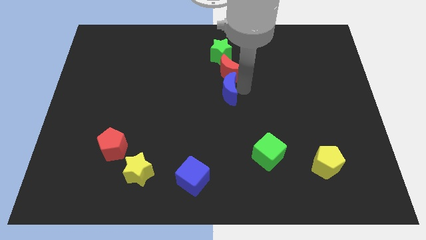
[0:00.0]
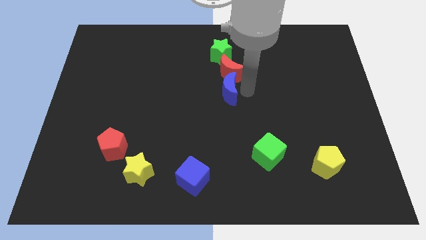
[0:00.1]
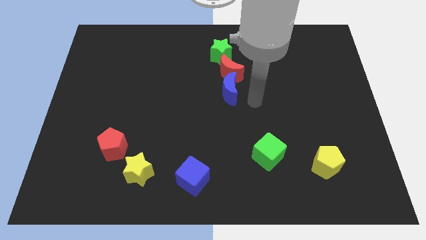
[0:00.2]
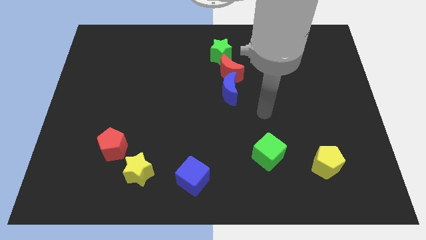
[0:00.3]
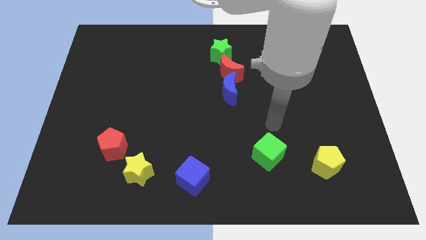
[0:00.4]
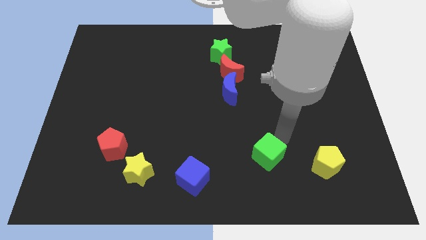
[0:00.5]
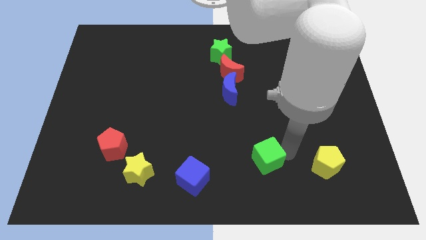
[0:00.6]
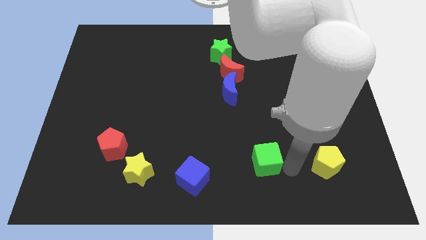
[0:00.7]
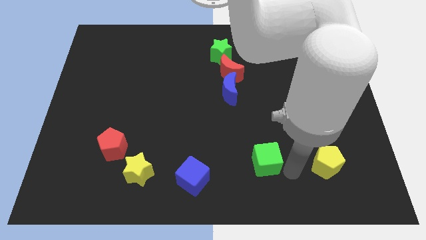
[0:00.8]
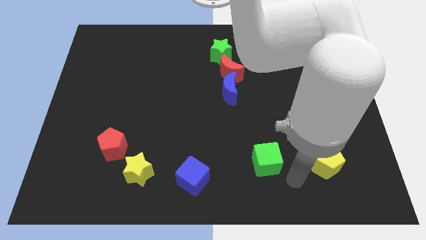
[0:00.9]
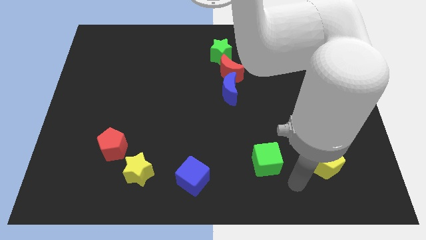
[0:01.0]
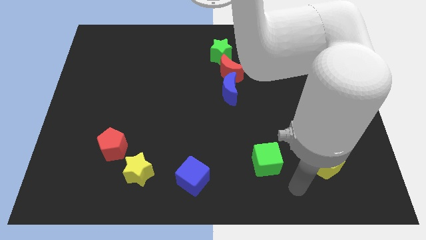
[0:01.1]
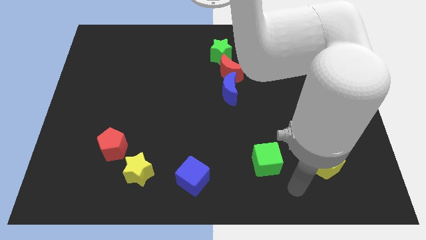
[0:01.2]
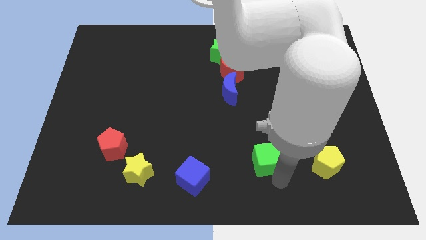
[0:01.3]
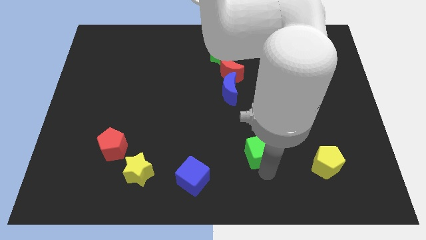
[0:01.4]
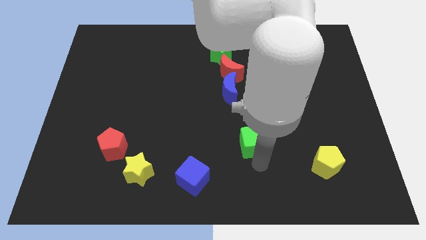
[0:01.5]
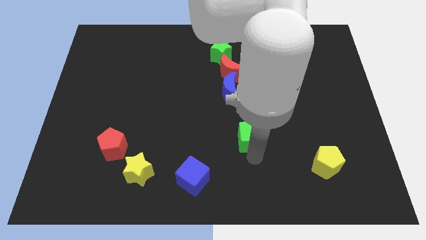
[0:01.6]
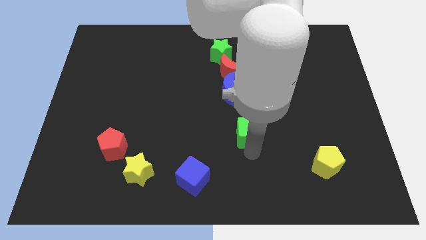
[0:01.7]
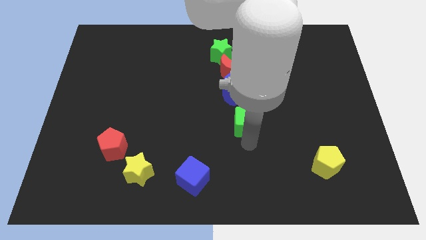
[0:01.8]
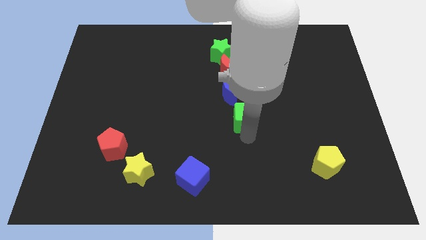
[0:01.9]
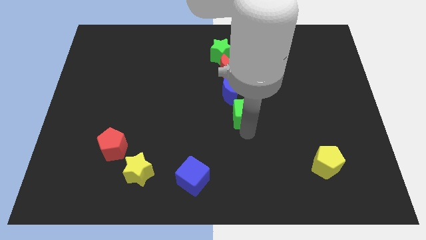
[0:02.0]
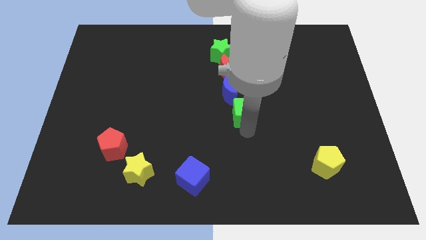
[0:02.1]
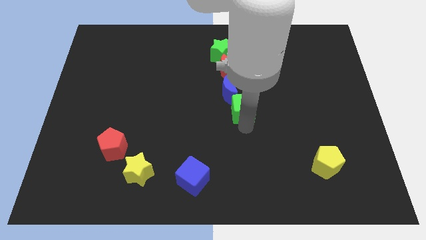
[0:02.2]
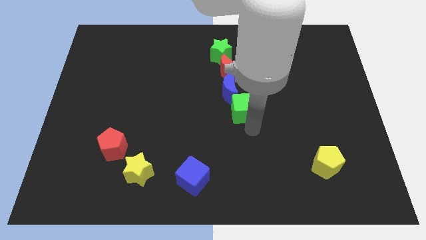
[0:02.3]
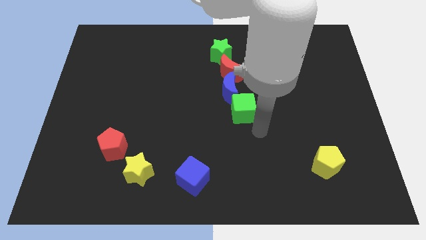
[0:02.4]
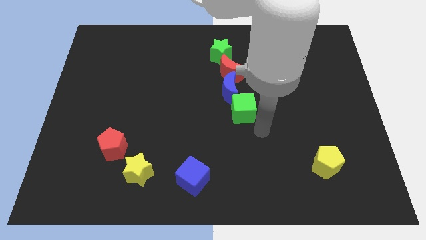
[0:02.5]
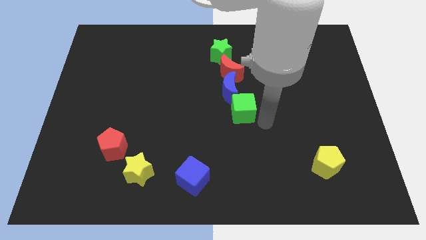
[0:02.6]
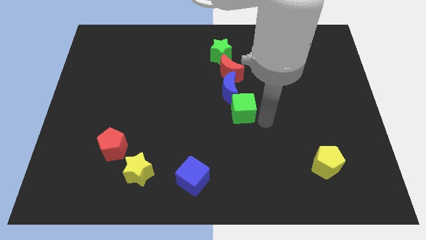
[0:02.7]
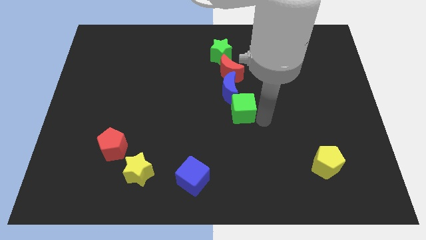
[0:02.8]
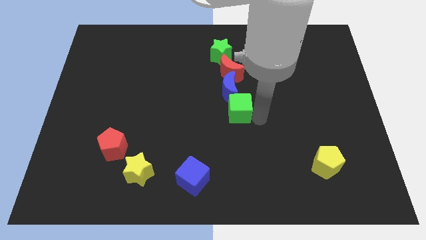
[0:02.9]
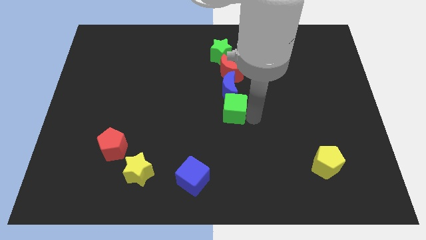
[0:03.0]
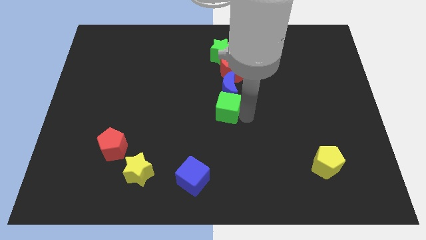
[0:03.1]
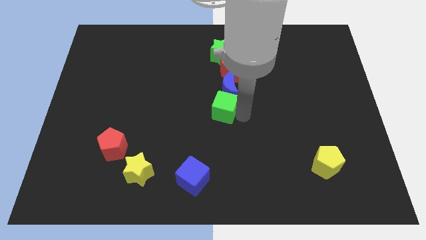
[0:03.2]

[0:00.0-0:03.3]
push the green cube to the bottom of blocks to form vertical line

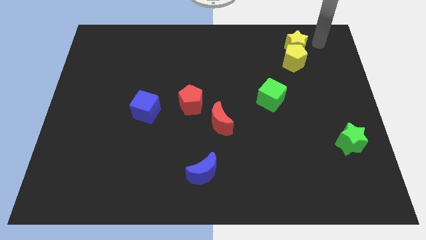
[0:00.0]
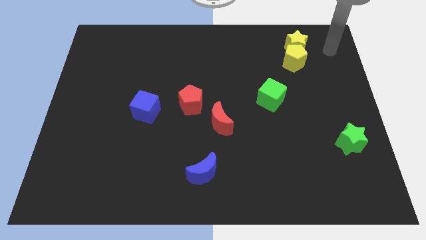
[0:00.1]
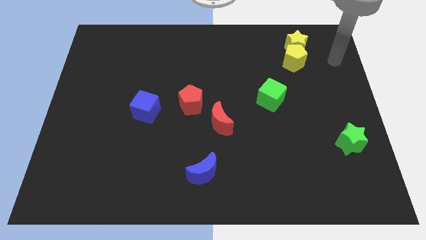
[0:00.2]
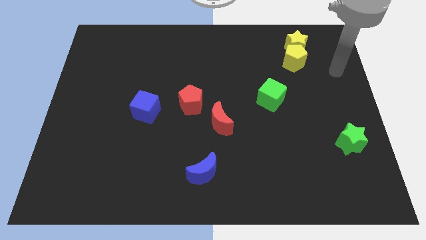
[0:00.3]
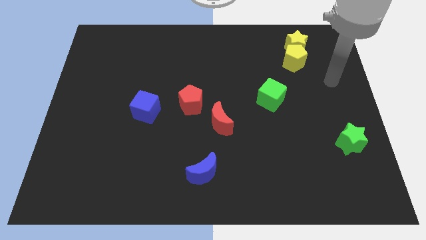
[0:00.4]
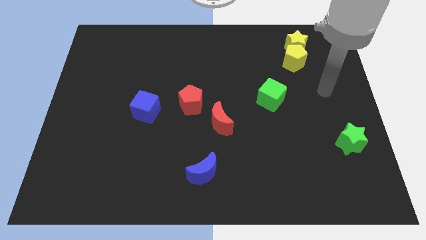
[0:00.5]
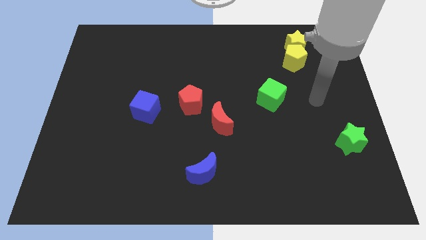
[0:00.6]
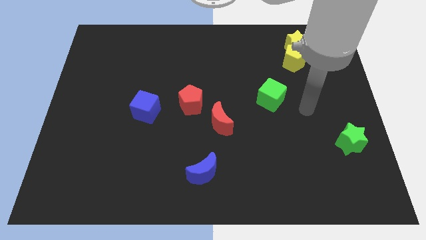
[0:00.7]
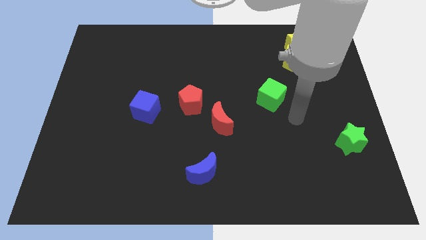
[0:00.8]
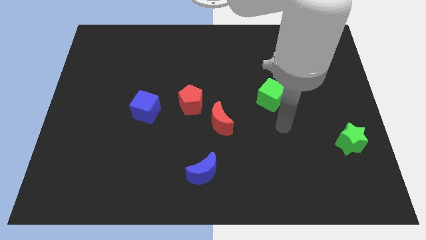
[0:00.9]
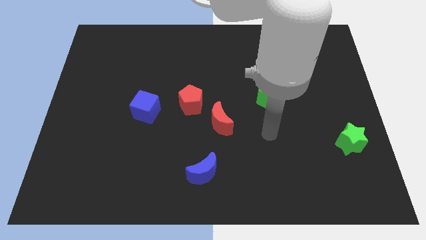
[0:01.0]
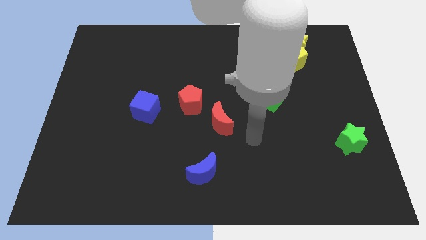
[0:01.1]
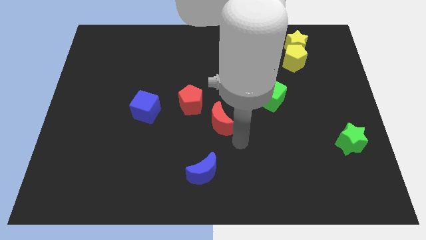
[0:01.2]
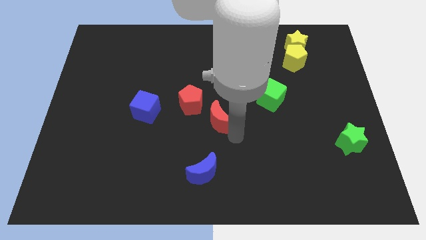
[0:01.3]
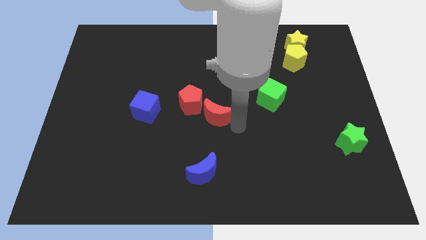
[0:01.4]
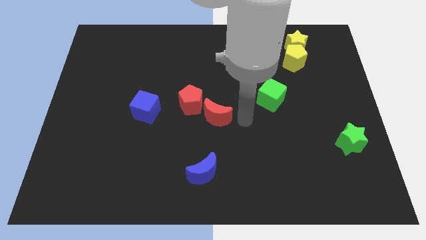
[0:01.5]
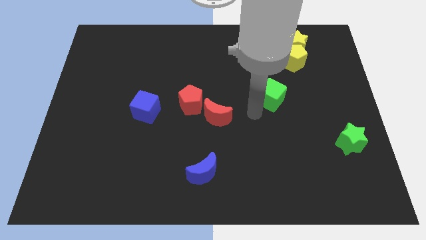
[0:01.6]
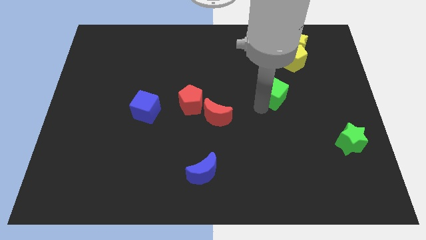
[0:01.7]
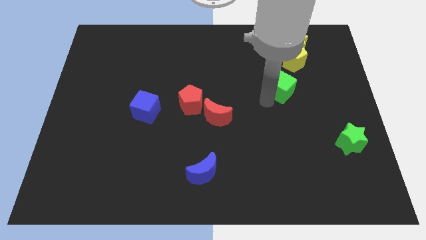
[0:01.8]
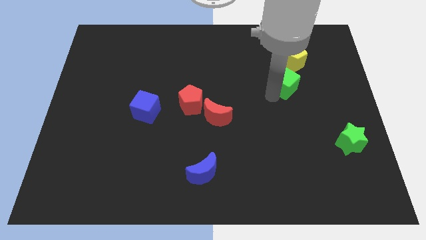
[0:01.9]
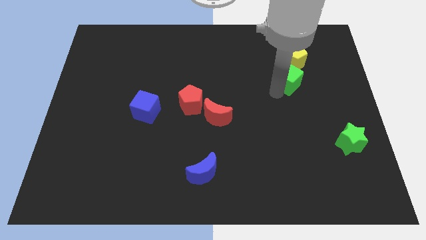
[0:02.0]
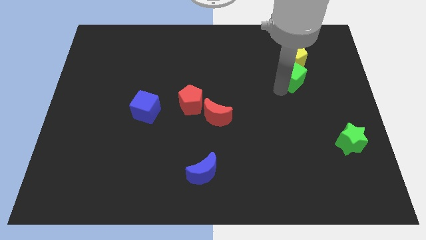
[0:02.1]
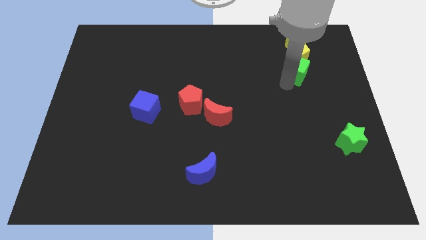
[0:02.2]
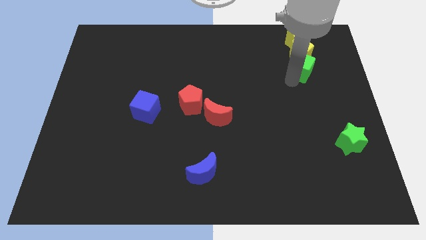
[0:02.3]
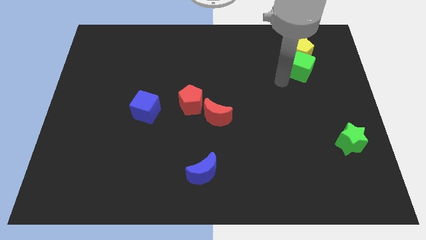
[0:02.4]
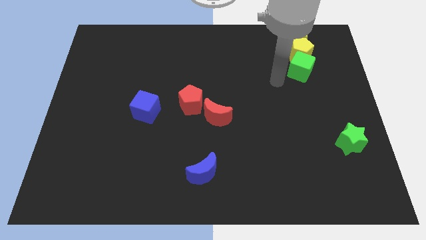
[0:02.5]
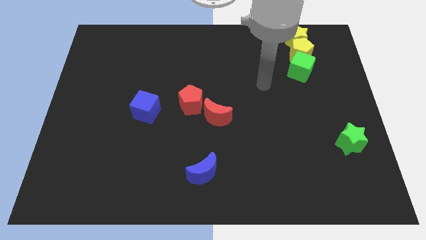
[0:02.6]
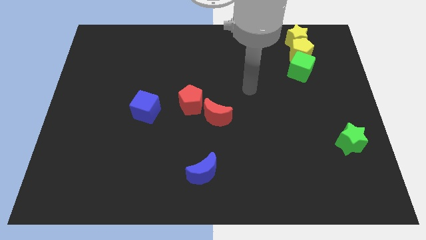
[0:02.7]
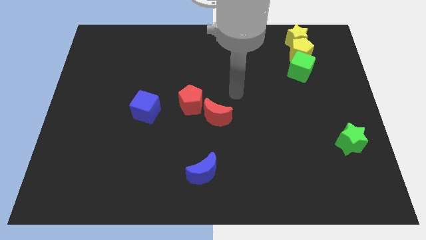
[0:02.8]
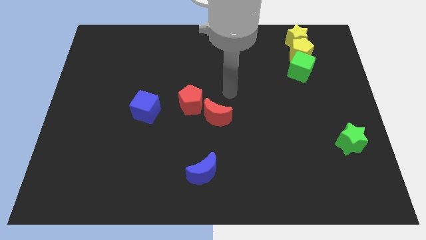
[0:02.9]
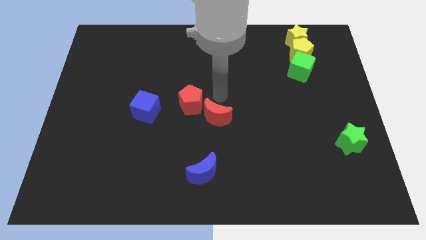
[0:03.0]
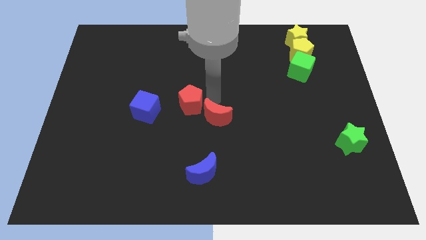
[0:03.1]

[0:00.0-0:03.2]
push the green cube into the yellow pentagon

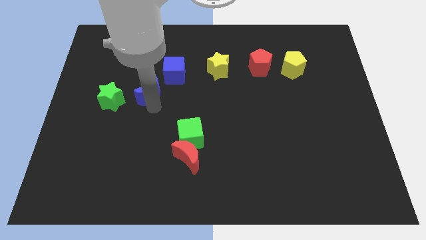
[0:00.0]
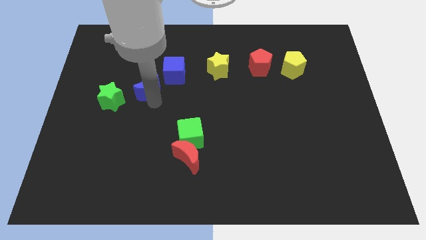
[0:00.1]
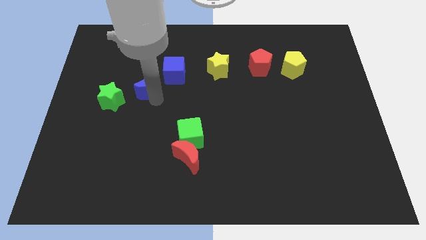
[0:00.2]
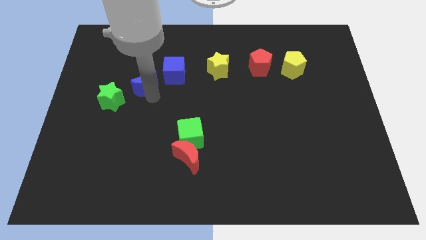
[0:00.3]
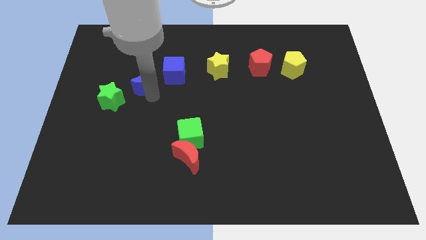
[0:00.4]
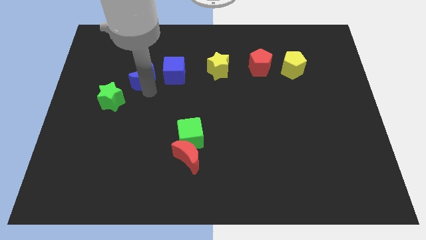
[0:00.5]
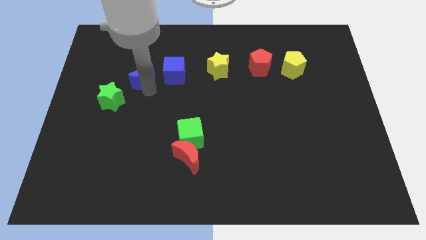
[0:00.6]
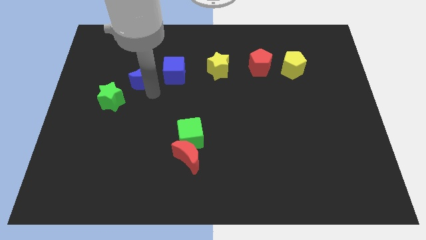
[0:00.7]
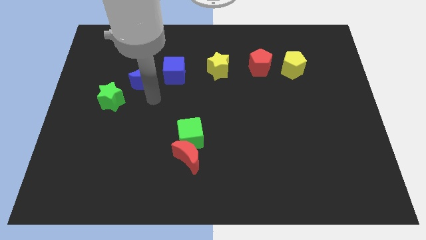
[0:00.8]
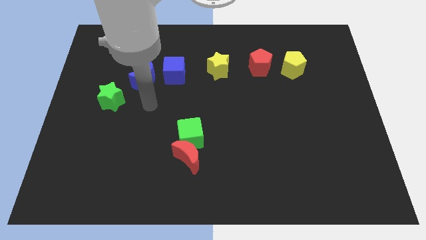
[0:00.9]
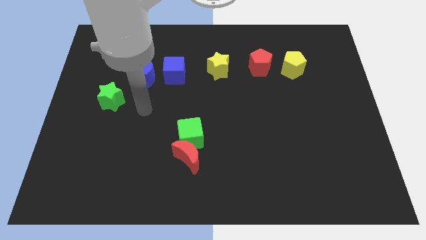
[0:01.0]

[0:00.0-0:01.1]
place the blue crescent to the left side of the blue cube

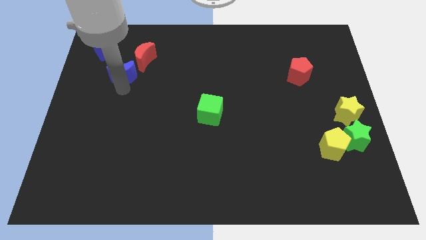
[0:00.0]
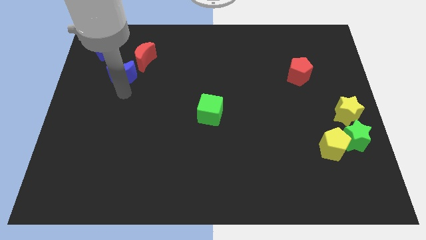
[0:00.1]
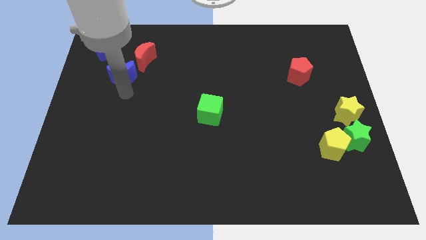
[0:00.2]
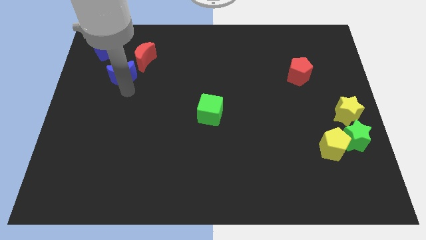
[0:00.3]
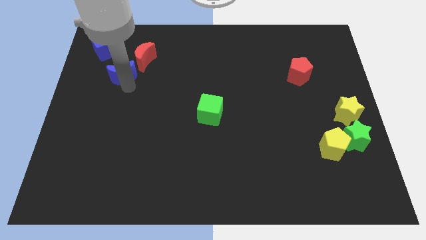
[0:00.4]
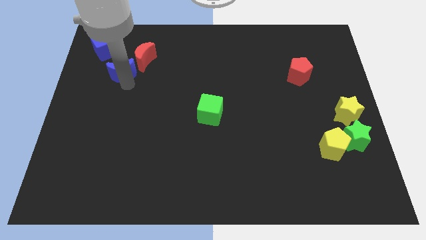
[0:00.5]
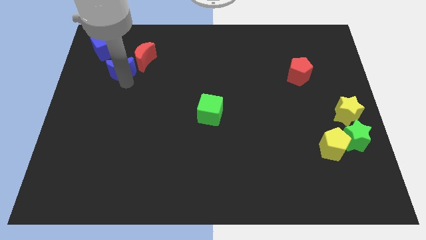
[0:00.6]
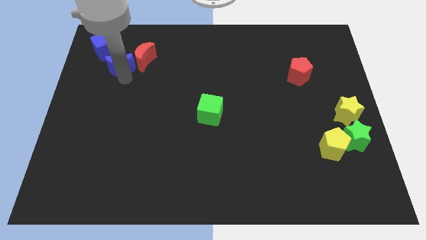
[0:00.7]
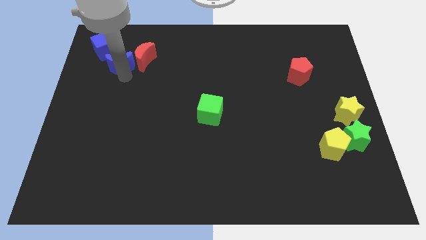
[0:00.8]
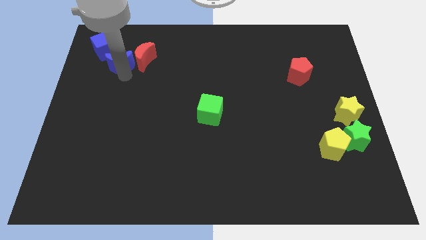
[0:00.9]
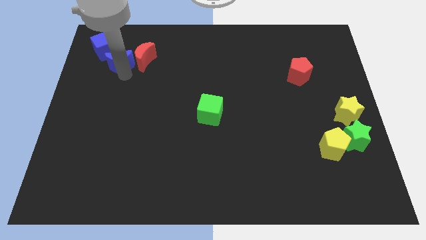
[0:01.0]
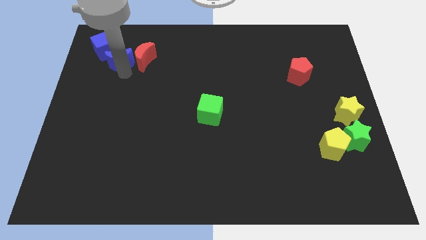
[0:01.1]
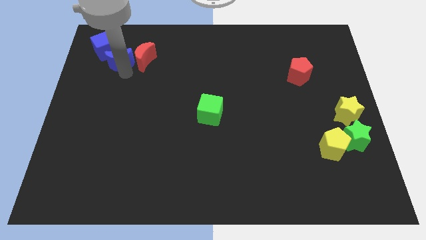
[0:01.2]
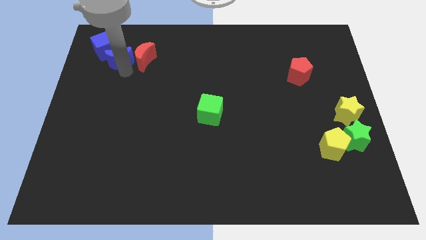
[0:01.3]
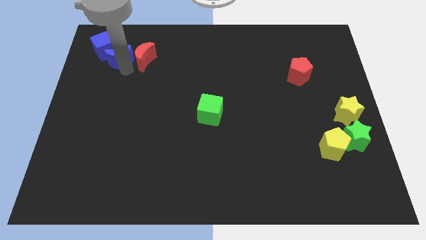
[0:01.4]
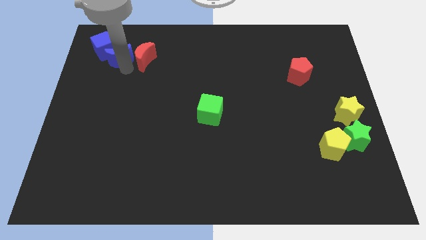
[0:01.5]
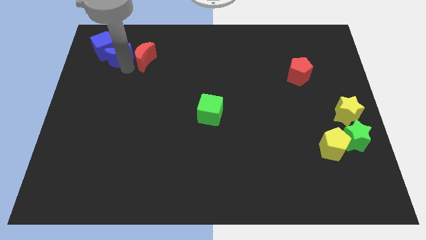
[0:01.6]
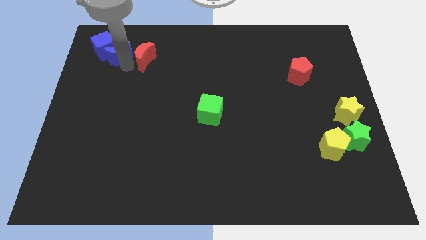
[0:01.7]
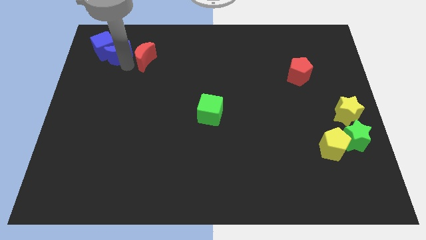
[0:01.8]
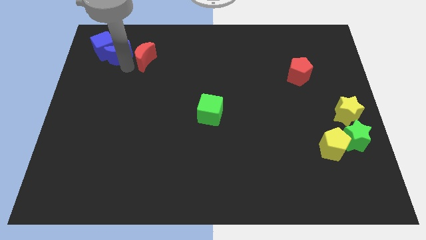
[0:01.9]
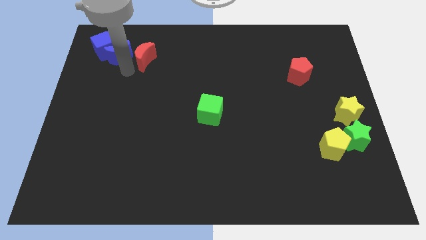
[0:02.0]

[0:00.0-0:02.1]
move the blue moon into the blue cube
